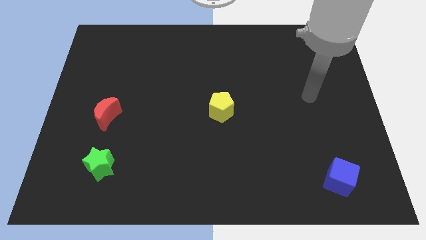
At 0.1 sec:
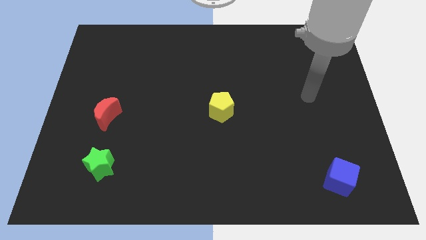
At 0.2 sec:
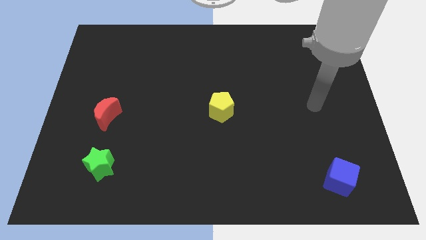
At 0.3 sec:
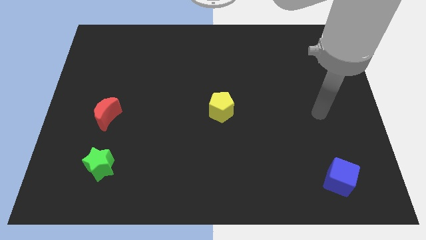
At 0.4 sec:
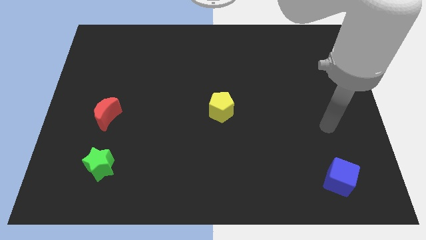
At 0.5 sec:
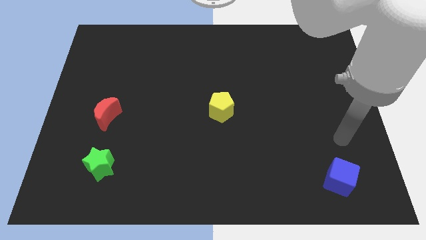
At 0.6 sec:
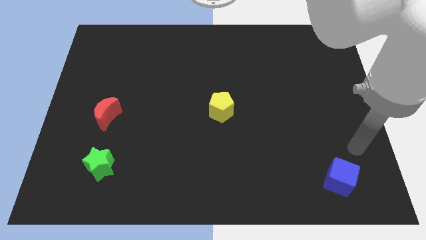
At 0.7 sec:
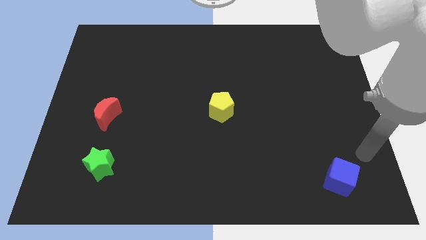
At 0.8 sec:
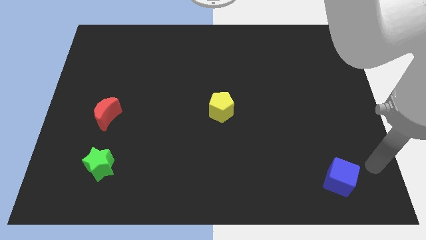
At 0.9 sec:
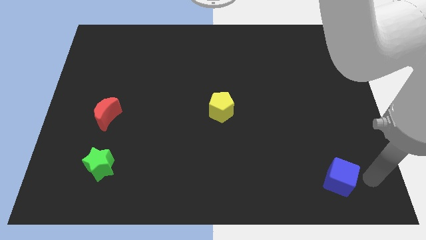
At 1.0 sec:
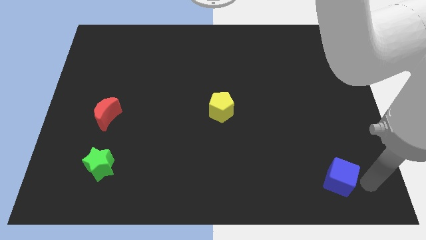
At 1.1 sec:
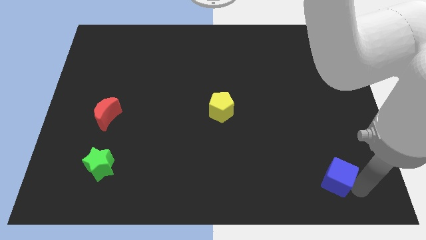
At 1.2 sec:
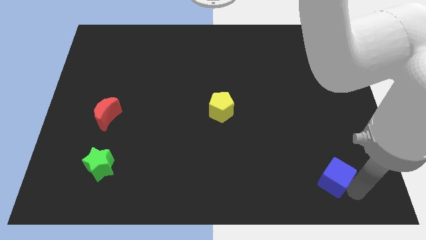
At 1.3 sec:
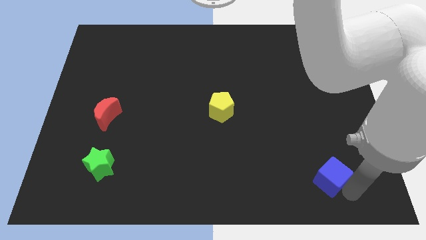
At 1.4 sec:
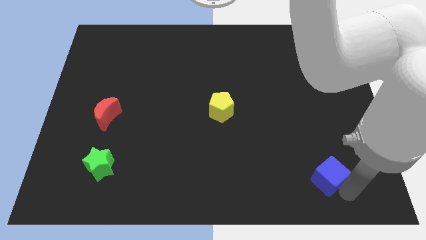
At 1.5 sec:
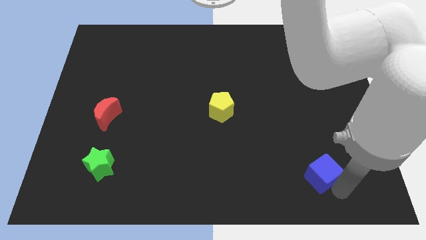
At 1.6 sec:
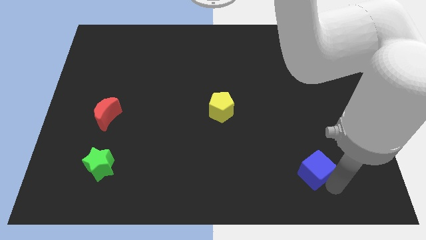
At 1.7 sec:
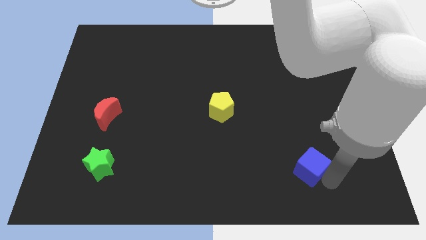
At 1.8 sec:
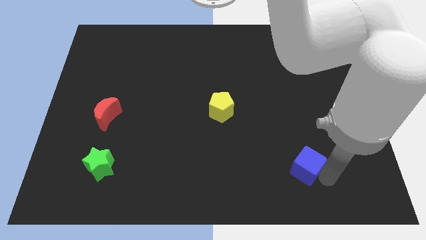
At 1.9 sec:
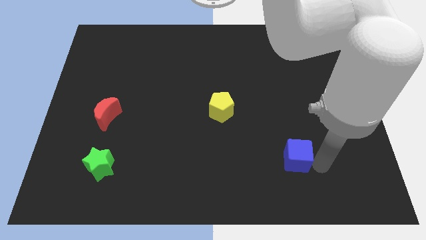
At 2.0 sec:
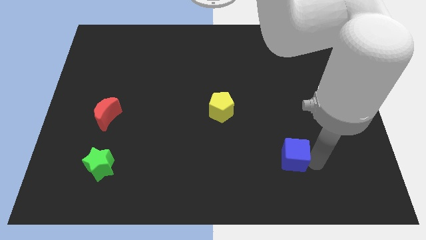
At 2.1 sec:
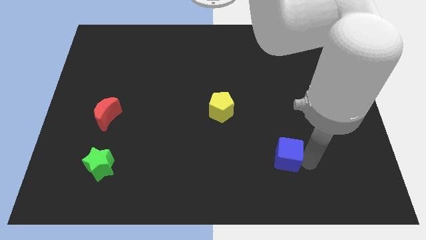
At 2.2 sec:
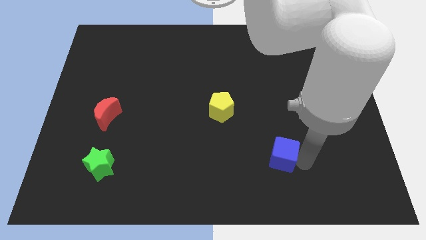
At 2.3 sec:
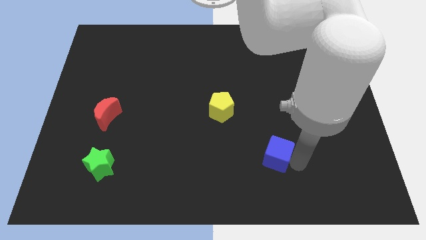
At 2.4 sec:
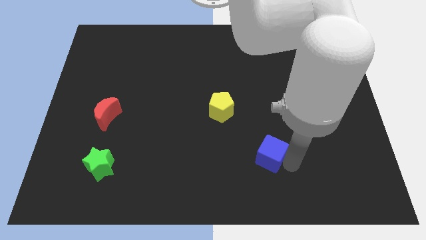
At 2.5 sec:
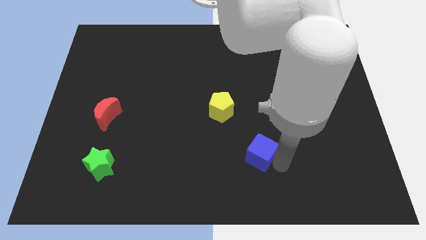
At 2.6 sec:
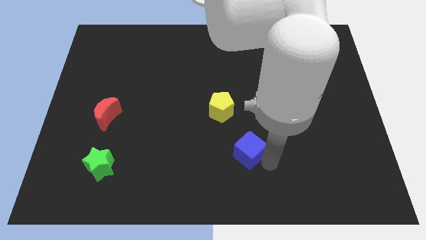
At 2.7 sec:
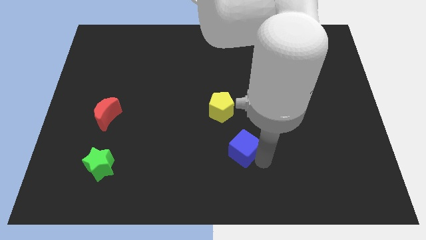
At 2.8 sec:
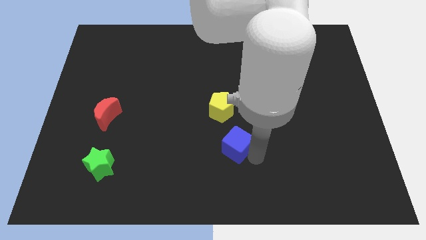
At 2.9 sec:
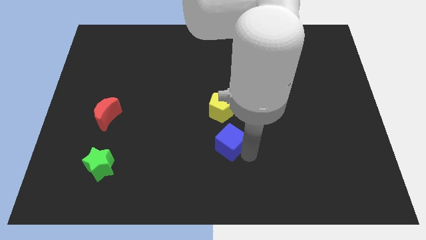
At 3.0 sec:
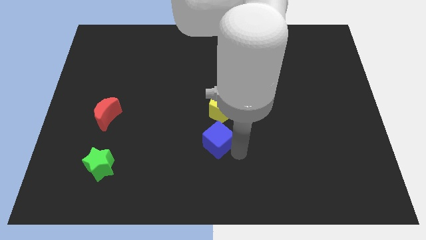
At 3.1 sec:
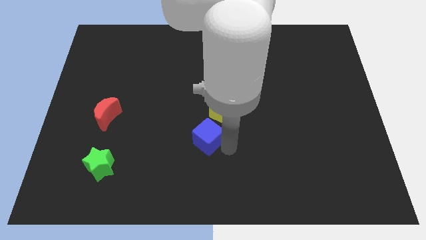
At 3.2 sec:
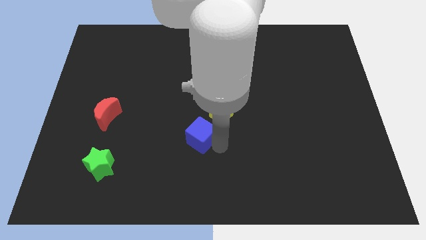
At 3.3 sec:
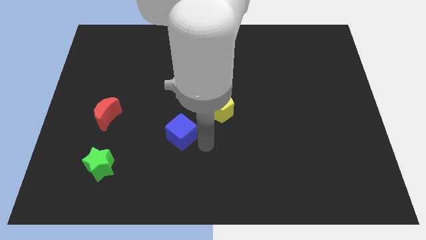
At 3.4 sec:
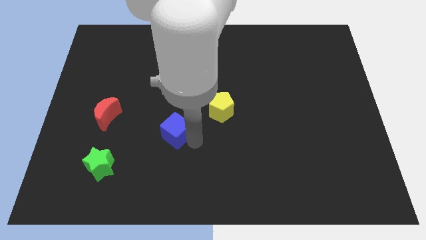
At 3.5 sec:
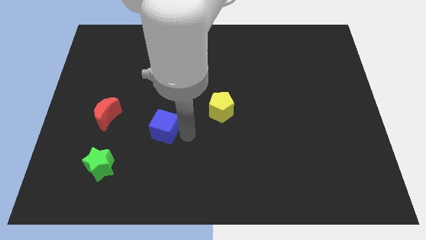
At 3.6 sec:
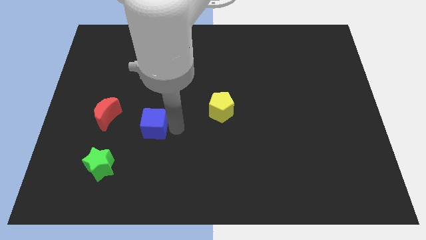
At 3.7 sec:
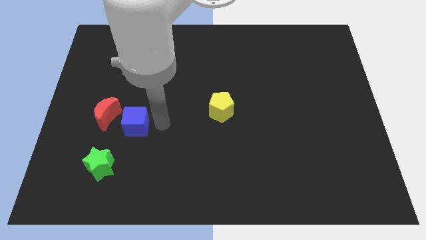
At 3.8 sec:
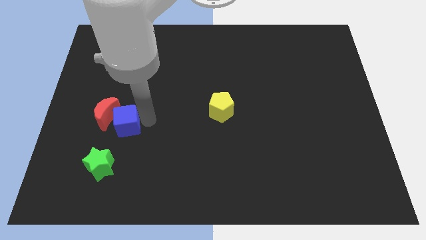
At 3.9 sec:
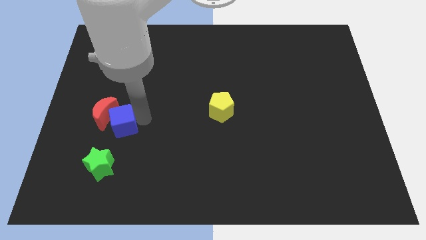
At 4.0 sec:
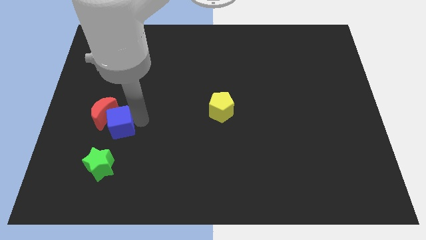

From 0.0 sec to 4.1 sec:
put the cube towards the red moon

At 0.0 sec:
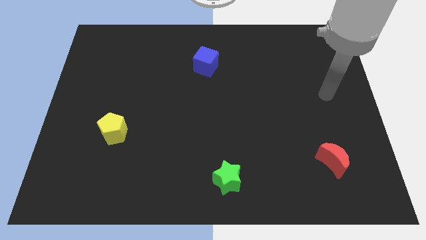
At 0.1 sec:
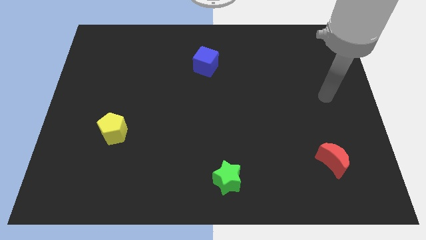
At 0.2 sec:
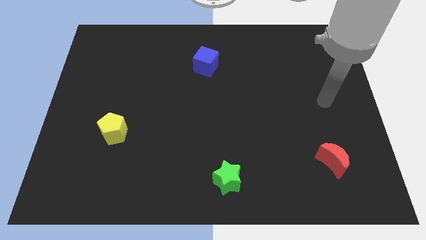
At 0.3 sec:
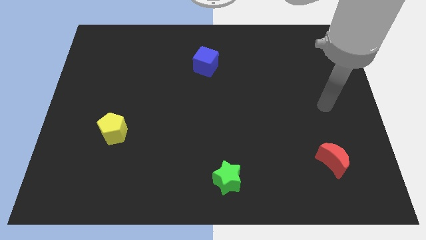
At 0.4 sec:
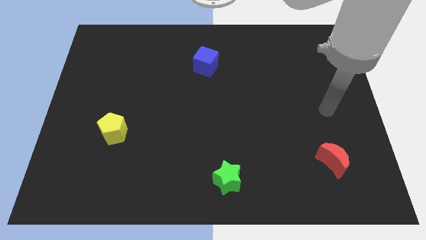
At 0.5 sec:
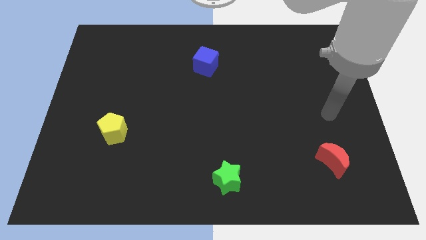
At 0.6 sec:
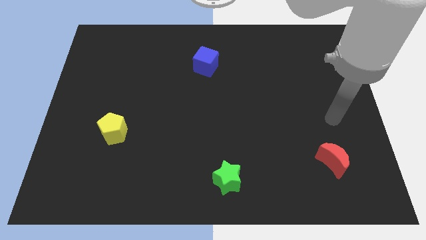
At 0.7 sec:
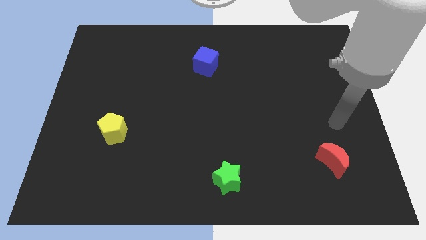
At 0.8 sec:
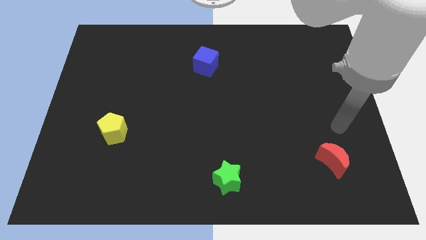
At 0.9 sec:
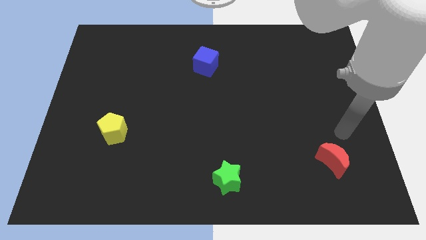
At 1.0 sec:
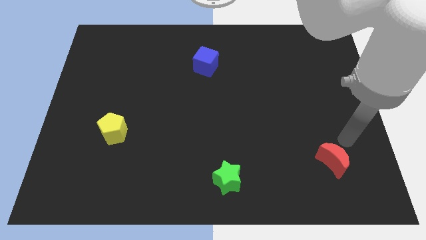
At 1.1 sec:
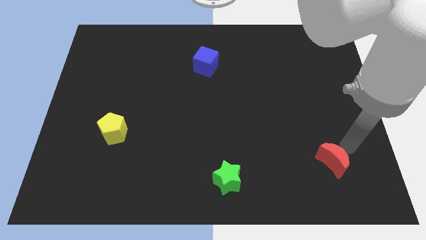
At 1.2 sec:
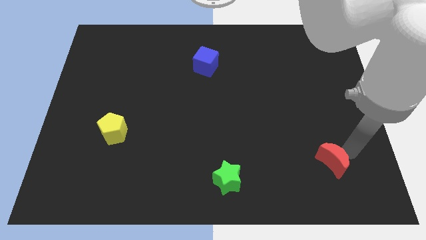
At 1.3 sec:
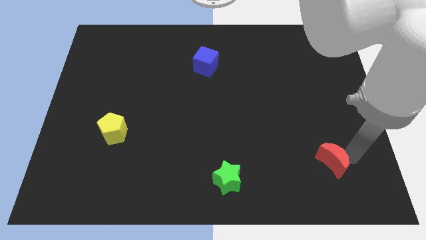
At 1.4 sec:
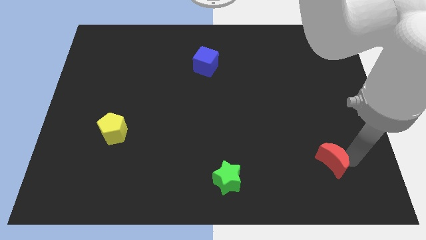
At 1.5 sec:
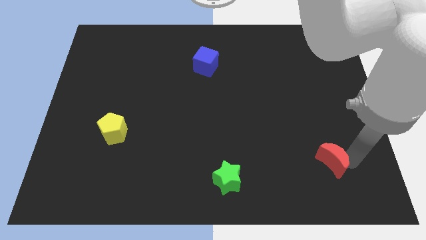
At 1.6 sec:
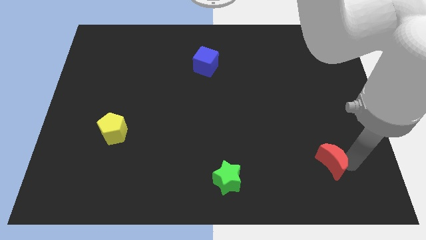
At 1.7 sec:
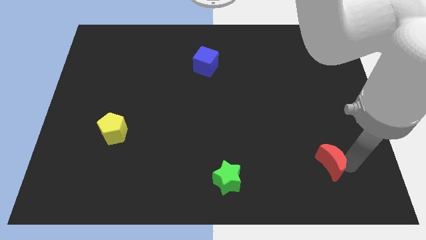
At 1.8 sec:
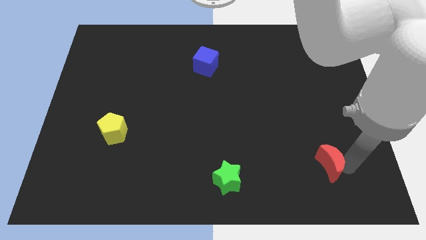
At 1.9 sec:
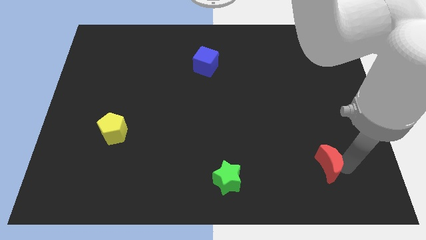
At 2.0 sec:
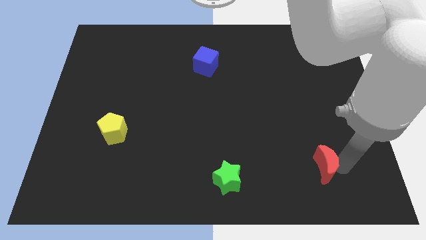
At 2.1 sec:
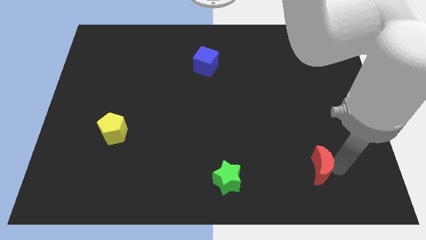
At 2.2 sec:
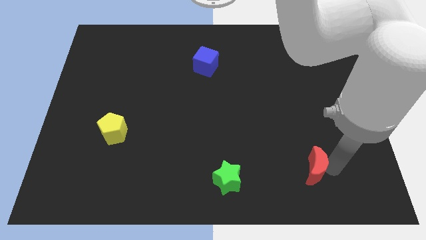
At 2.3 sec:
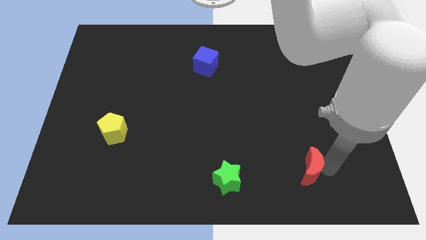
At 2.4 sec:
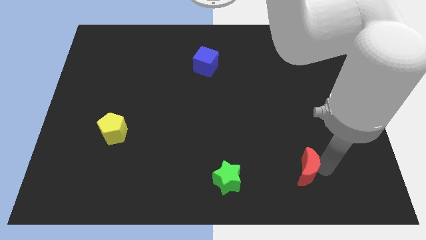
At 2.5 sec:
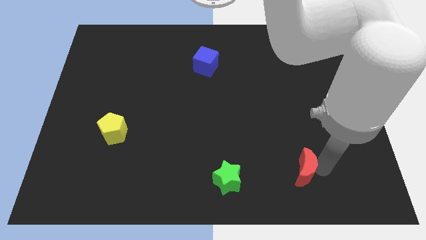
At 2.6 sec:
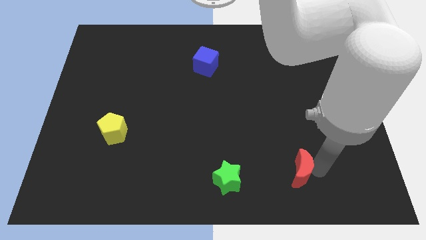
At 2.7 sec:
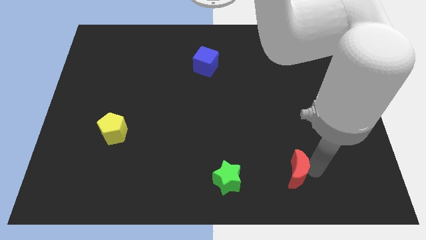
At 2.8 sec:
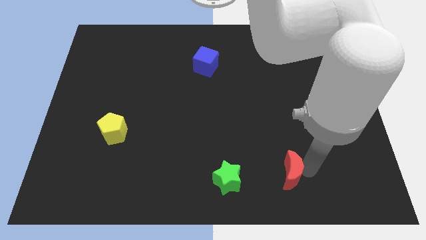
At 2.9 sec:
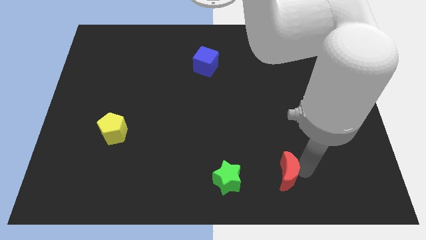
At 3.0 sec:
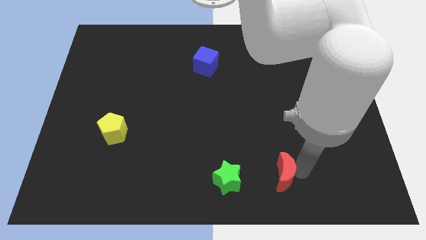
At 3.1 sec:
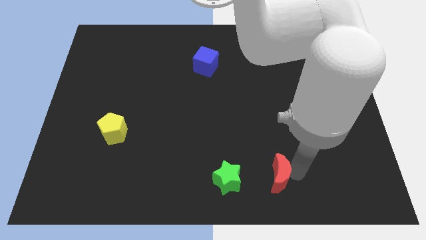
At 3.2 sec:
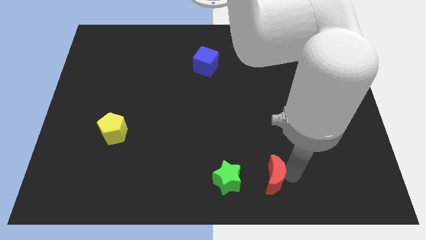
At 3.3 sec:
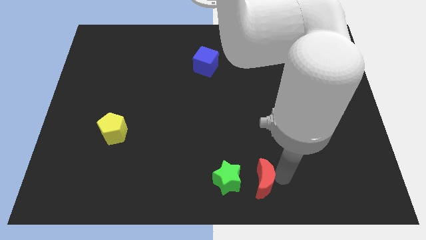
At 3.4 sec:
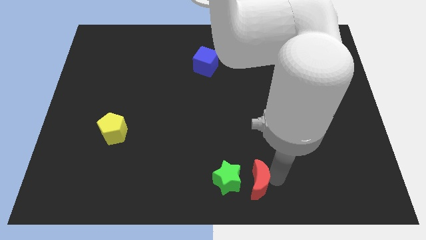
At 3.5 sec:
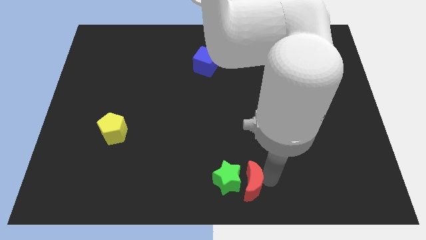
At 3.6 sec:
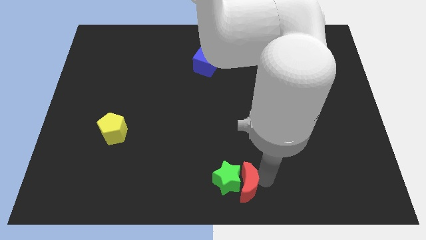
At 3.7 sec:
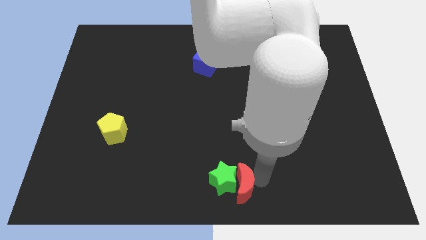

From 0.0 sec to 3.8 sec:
move the moon close to the star

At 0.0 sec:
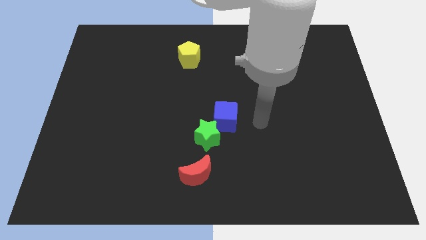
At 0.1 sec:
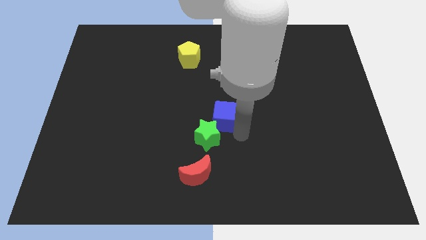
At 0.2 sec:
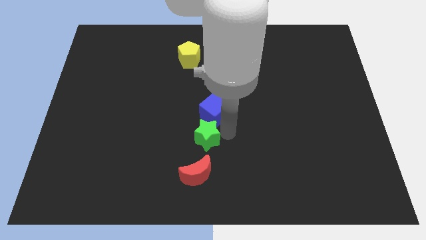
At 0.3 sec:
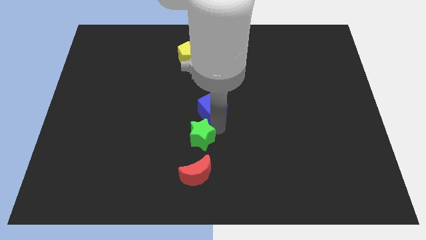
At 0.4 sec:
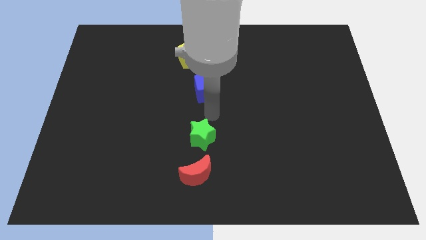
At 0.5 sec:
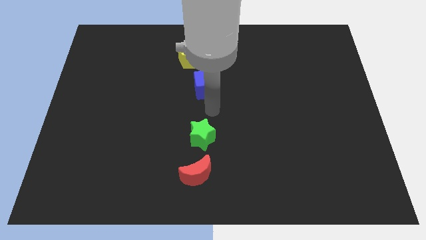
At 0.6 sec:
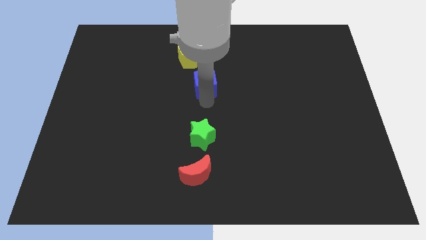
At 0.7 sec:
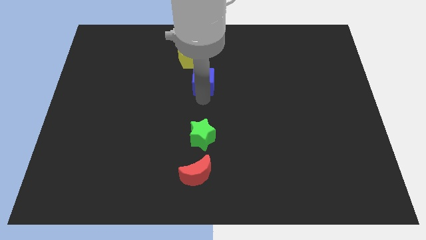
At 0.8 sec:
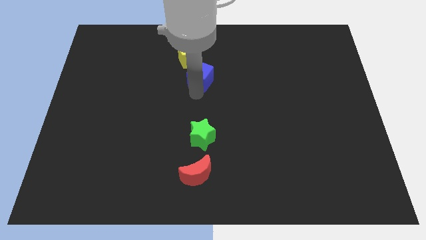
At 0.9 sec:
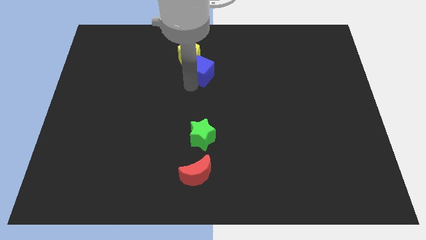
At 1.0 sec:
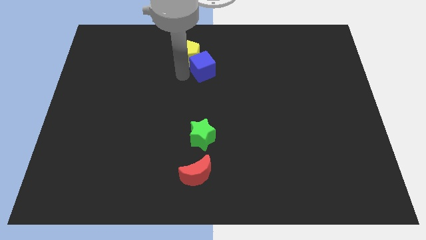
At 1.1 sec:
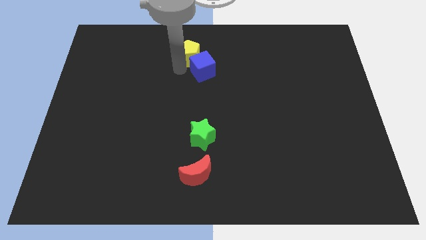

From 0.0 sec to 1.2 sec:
move the blue cube to the yellow block
